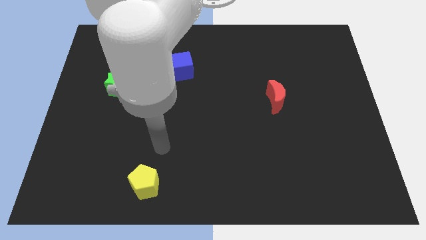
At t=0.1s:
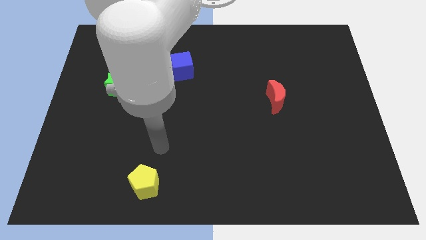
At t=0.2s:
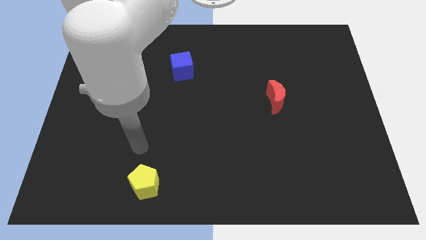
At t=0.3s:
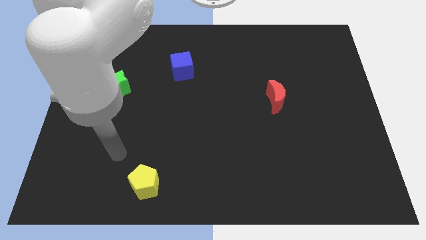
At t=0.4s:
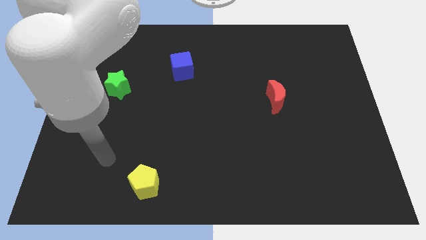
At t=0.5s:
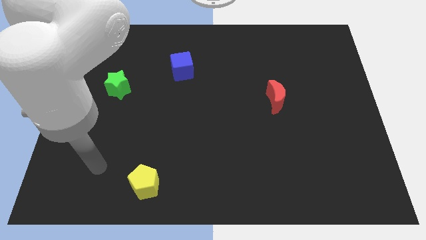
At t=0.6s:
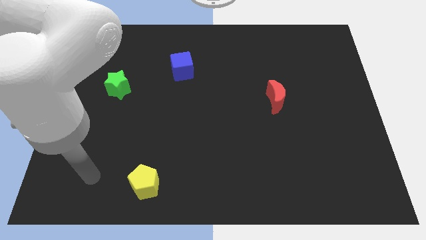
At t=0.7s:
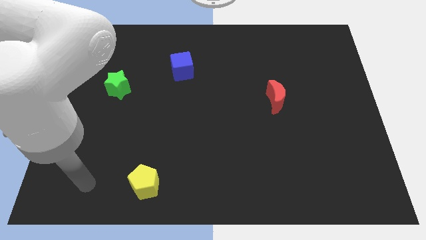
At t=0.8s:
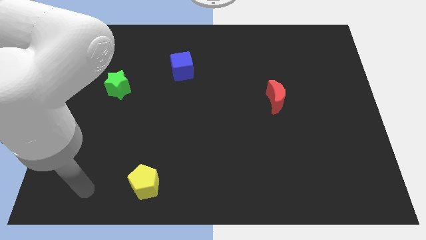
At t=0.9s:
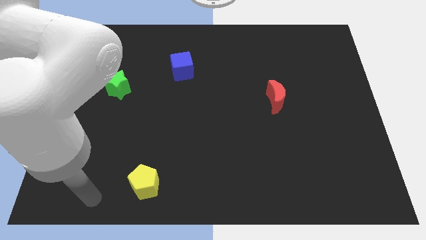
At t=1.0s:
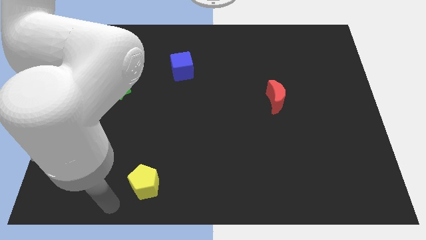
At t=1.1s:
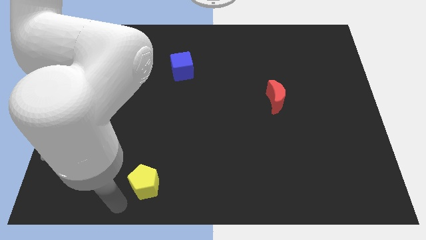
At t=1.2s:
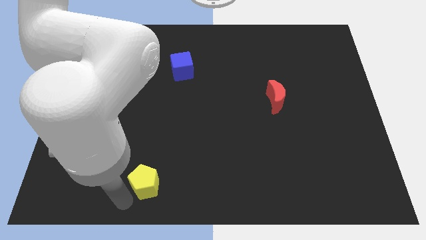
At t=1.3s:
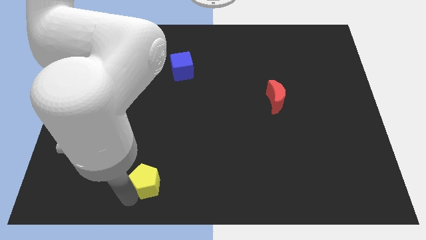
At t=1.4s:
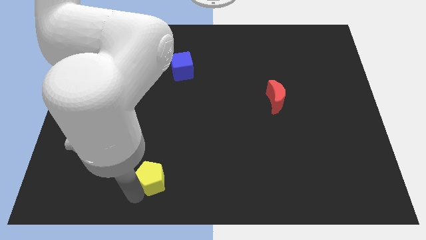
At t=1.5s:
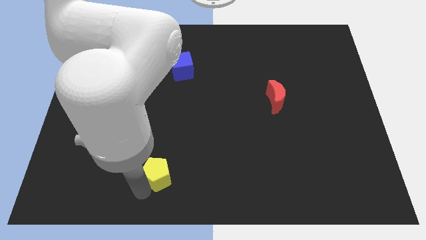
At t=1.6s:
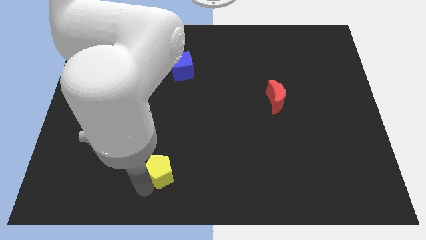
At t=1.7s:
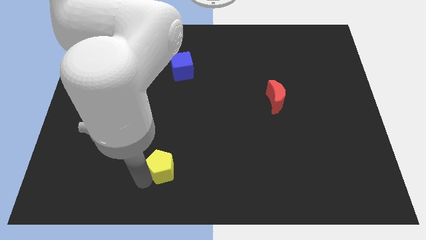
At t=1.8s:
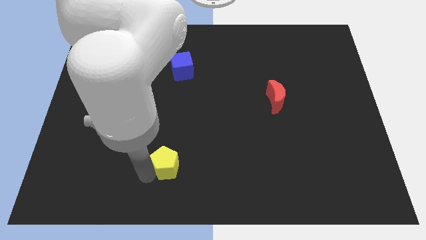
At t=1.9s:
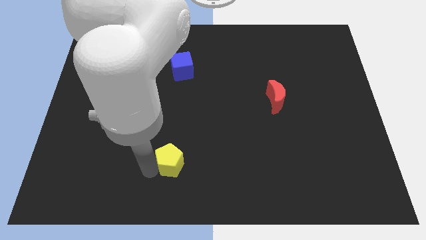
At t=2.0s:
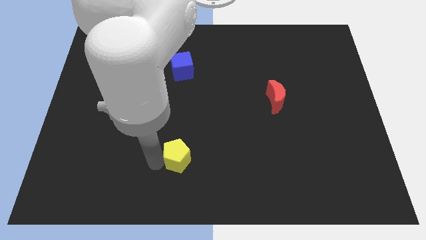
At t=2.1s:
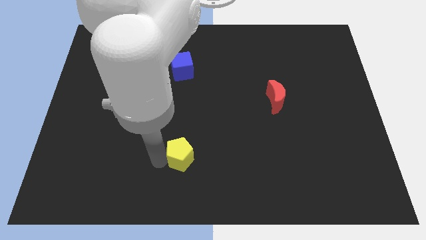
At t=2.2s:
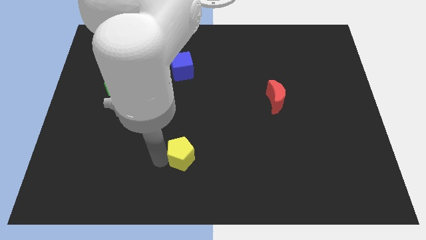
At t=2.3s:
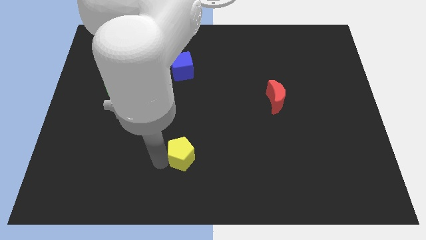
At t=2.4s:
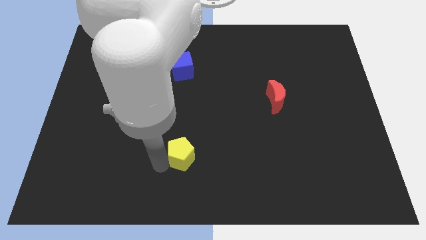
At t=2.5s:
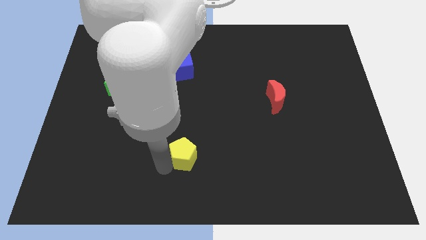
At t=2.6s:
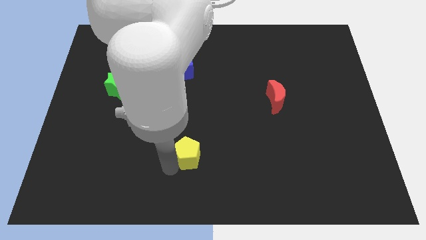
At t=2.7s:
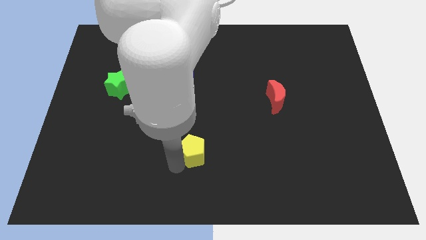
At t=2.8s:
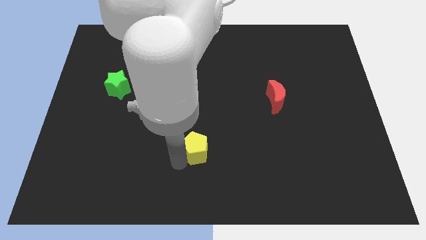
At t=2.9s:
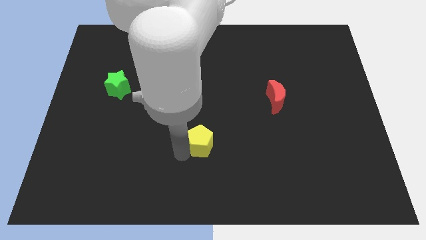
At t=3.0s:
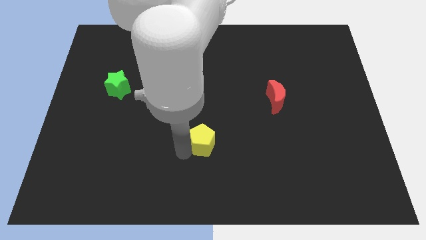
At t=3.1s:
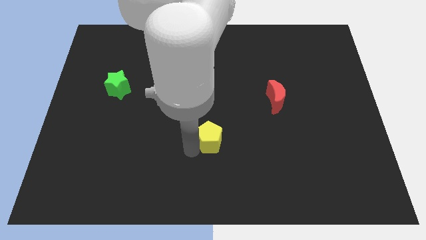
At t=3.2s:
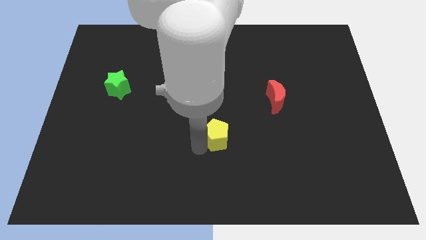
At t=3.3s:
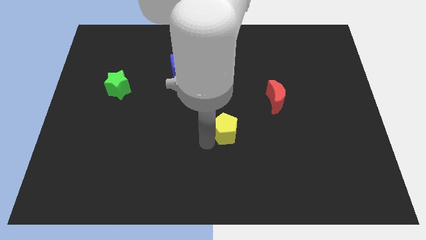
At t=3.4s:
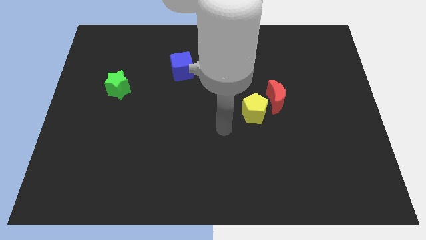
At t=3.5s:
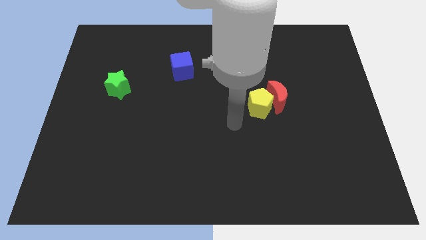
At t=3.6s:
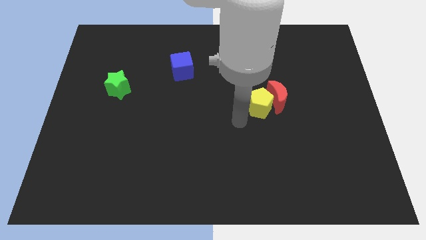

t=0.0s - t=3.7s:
push the yellow block towards the red moon

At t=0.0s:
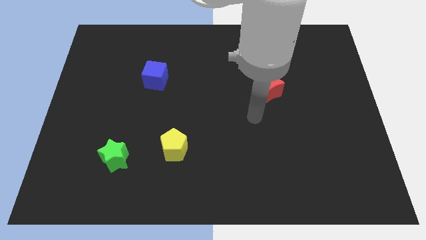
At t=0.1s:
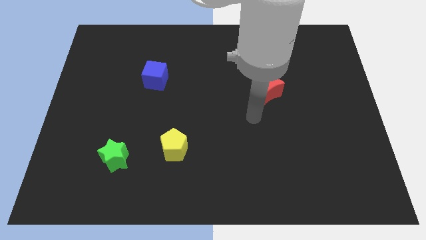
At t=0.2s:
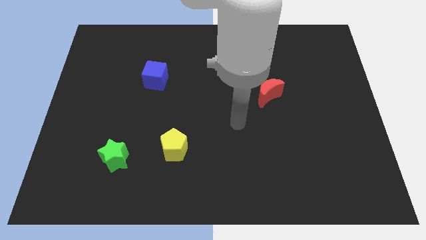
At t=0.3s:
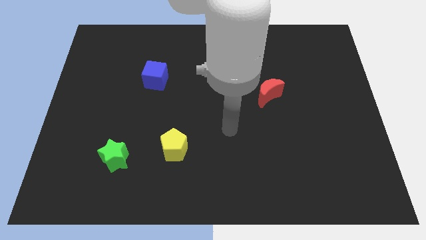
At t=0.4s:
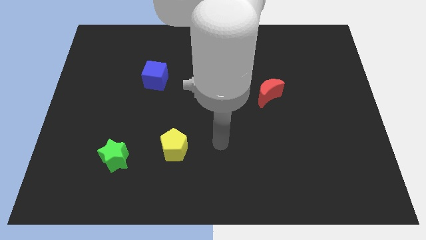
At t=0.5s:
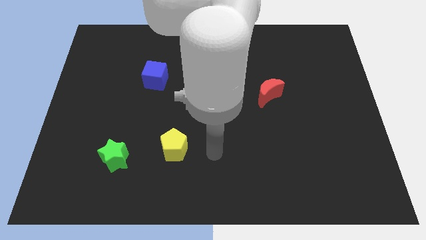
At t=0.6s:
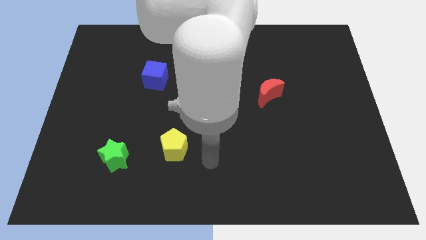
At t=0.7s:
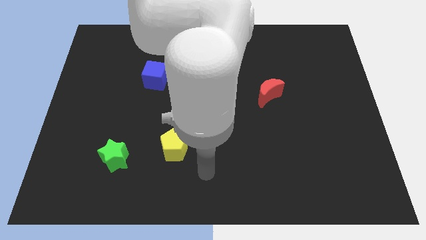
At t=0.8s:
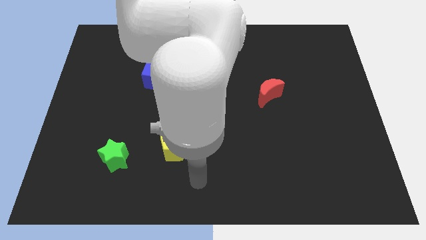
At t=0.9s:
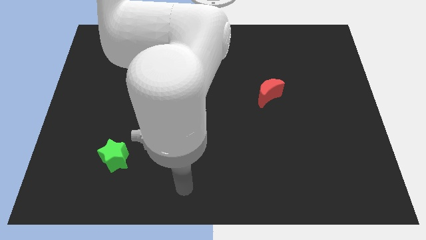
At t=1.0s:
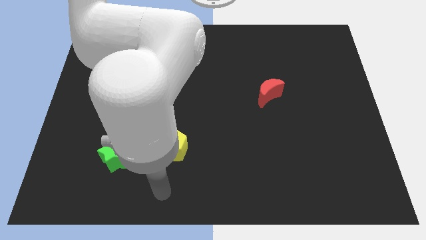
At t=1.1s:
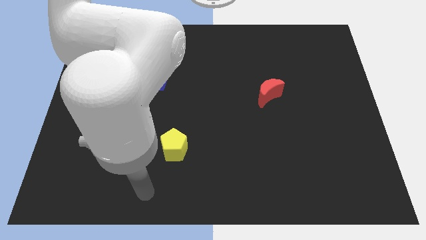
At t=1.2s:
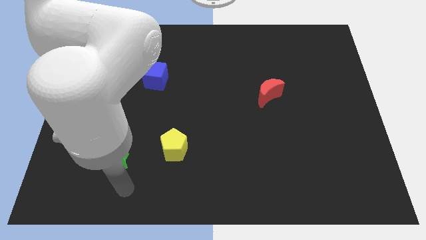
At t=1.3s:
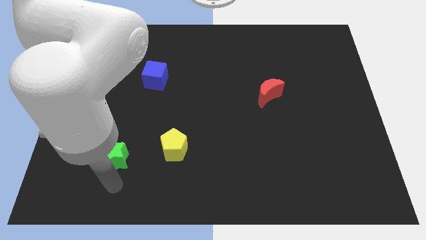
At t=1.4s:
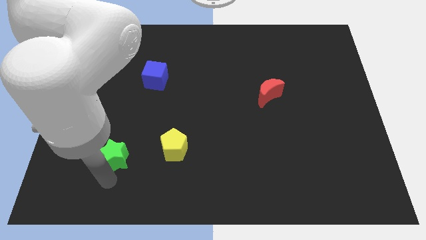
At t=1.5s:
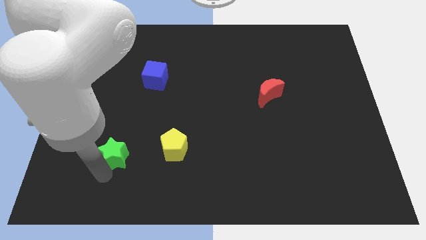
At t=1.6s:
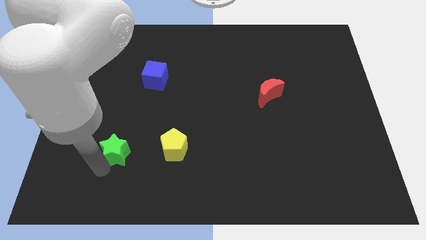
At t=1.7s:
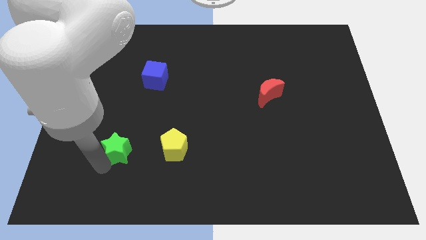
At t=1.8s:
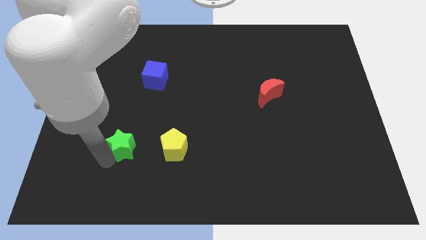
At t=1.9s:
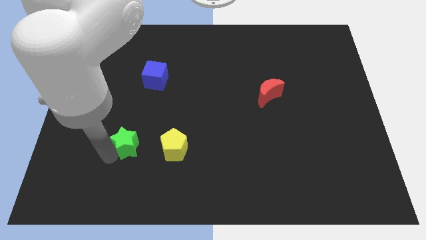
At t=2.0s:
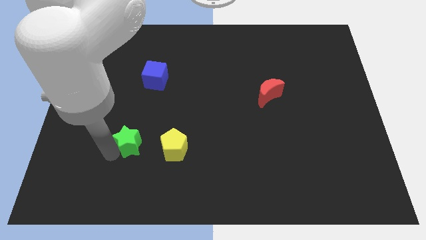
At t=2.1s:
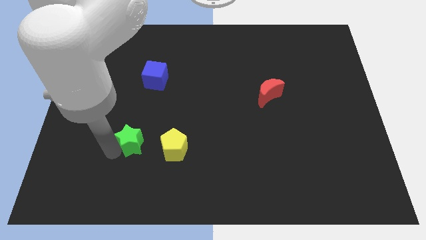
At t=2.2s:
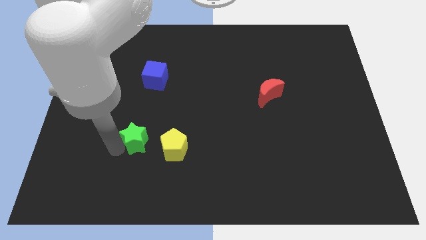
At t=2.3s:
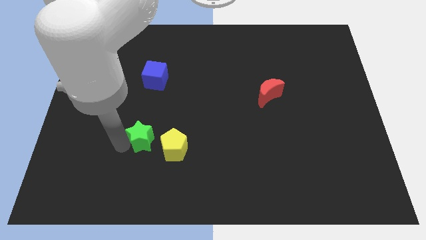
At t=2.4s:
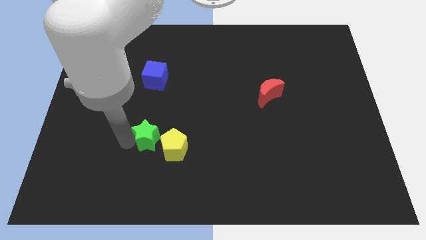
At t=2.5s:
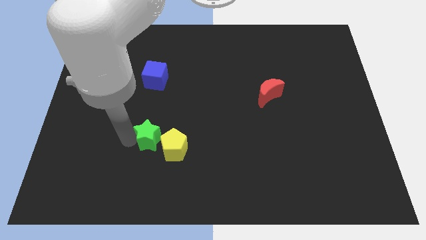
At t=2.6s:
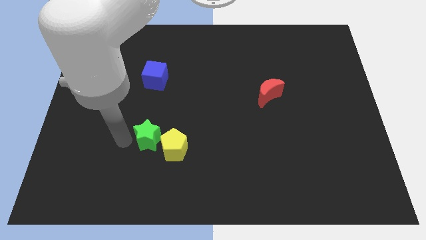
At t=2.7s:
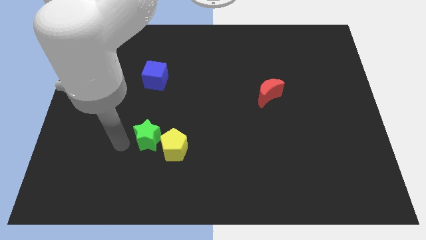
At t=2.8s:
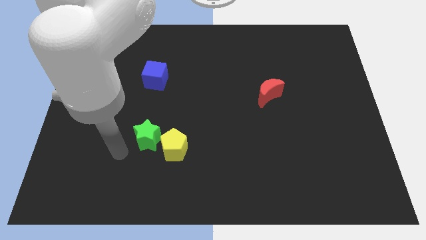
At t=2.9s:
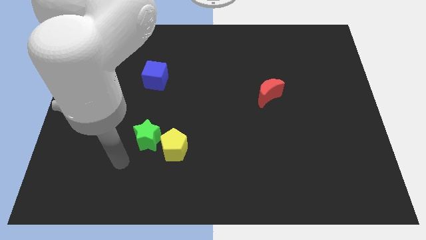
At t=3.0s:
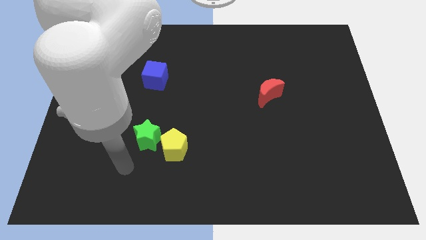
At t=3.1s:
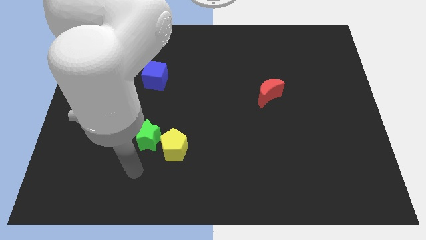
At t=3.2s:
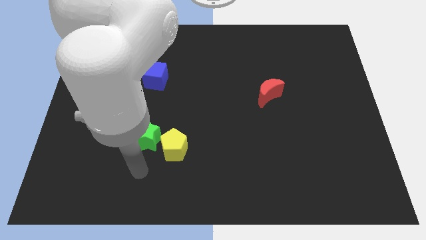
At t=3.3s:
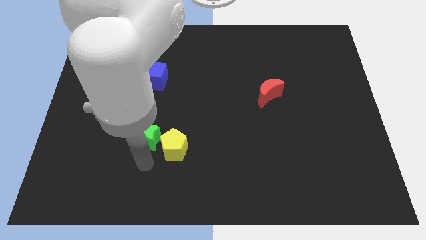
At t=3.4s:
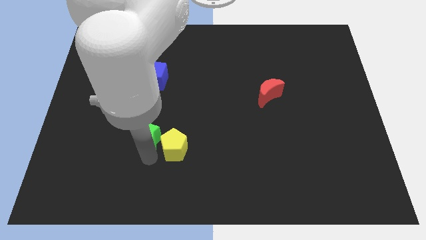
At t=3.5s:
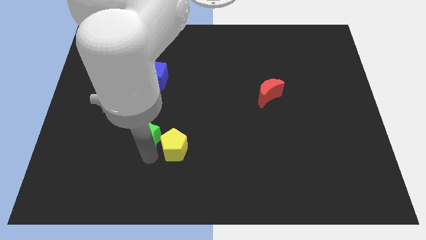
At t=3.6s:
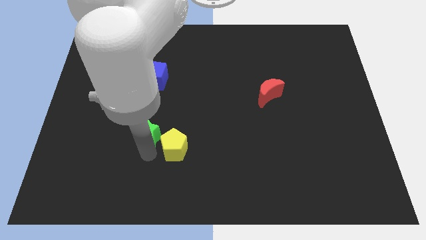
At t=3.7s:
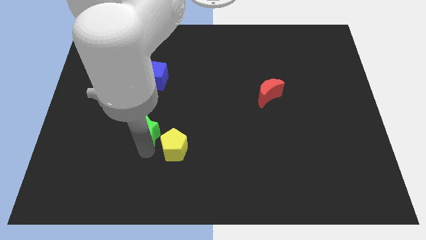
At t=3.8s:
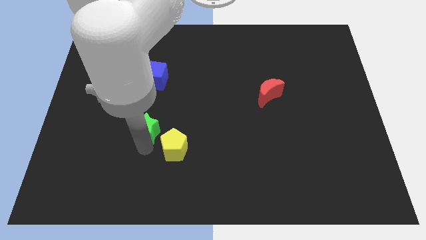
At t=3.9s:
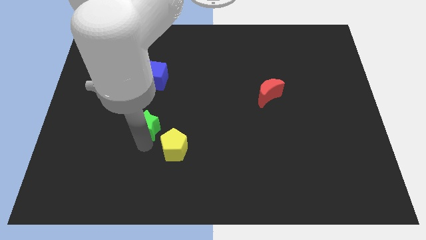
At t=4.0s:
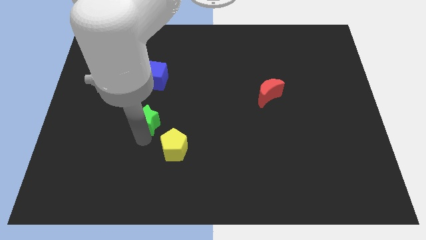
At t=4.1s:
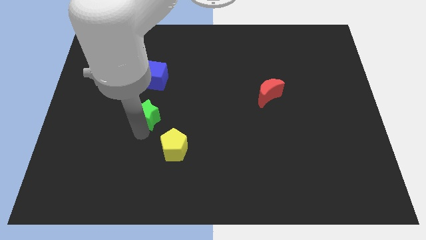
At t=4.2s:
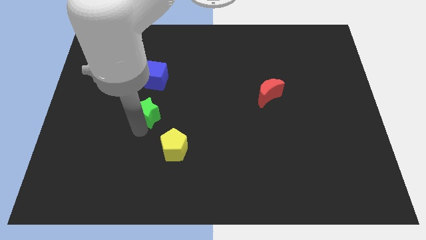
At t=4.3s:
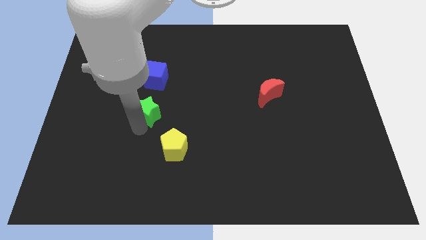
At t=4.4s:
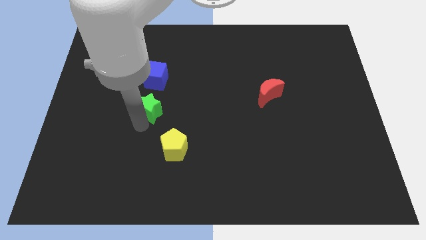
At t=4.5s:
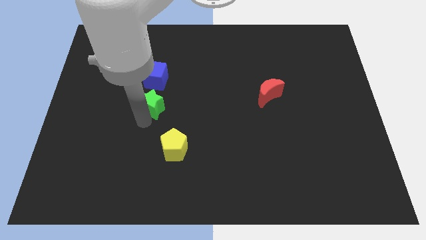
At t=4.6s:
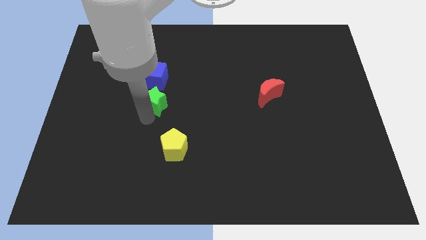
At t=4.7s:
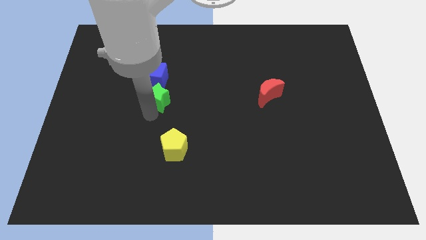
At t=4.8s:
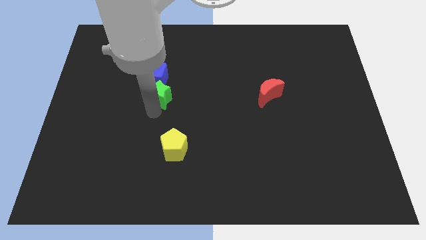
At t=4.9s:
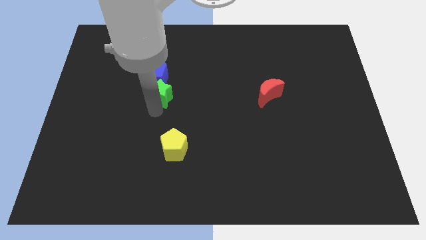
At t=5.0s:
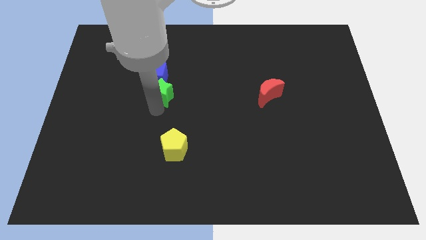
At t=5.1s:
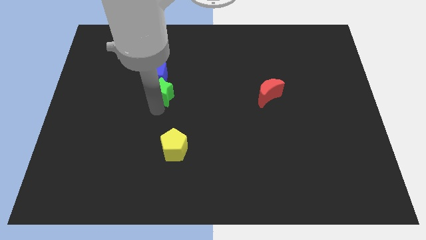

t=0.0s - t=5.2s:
slide the green star to the blue block
